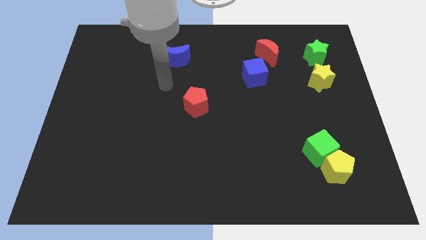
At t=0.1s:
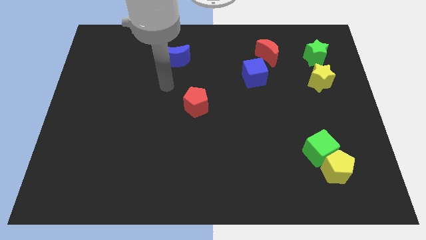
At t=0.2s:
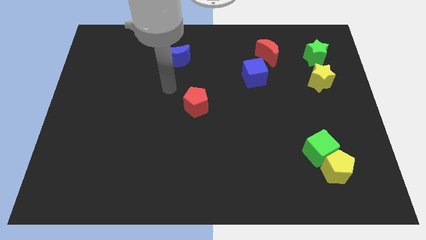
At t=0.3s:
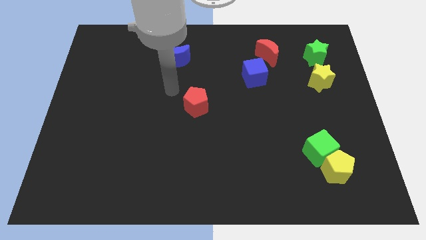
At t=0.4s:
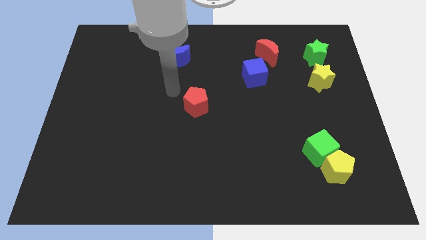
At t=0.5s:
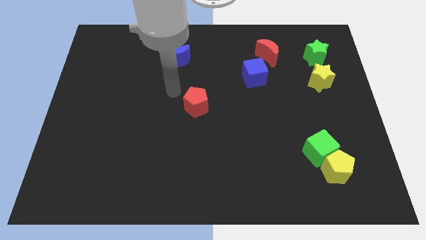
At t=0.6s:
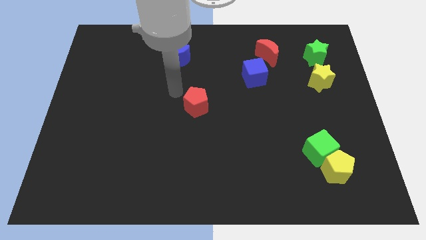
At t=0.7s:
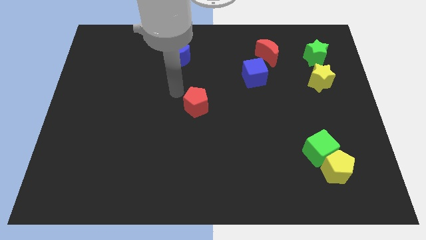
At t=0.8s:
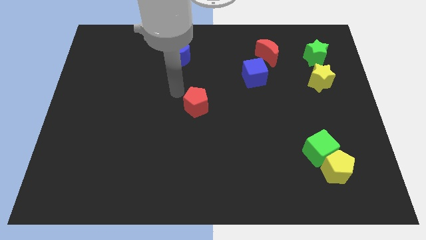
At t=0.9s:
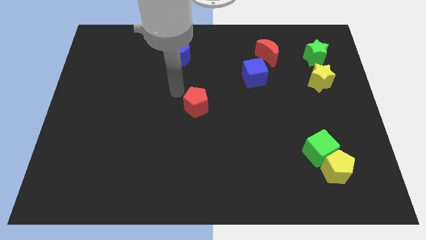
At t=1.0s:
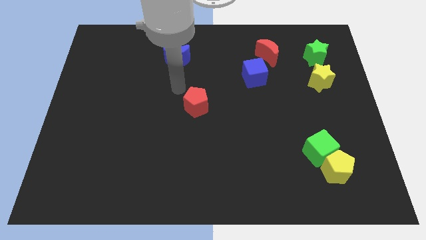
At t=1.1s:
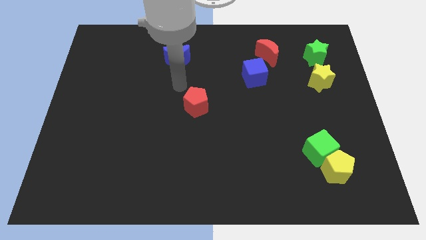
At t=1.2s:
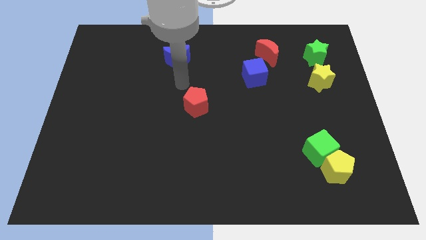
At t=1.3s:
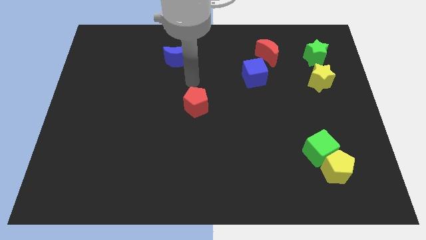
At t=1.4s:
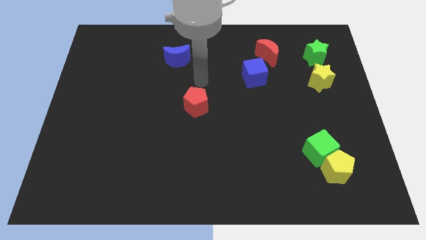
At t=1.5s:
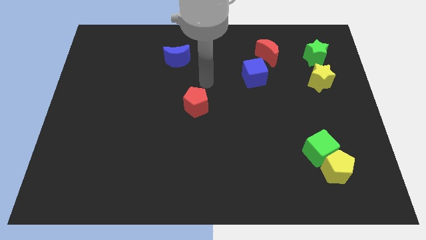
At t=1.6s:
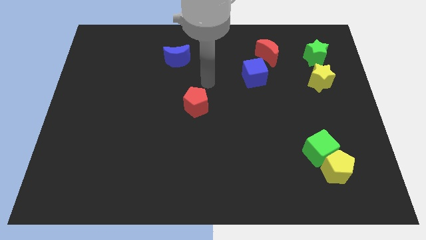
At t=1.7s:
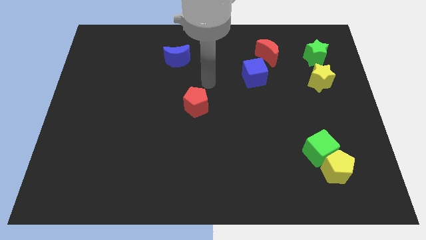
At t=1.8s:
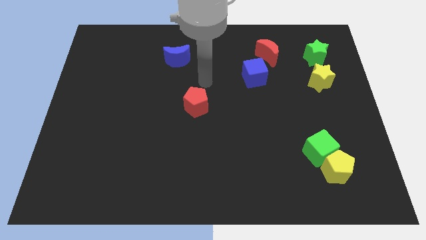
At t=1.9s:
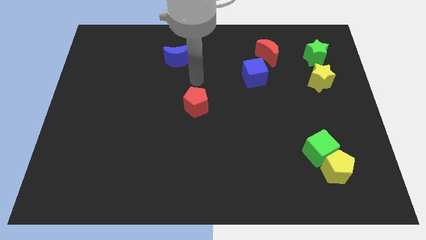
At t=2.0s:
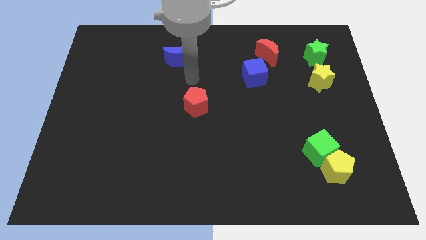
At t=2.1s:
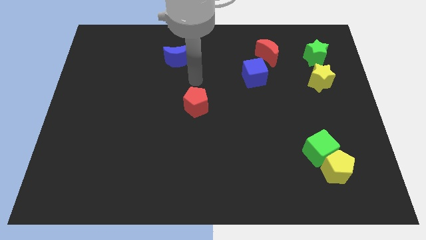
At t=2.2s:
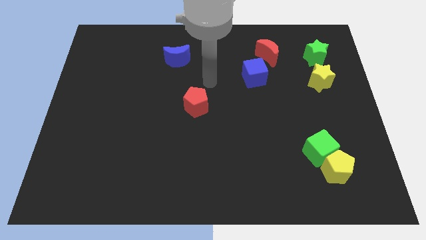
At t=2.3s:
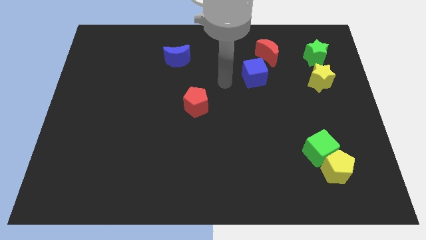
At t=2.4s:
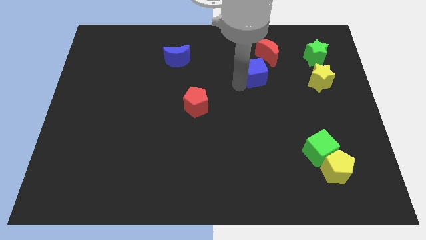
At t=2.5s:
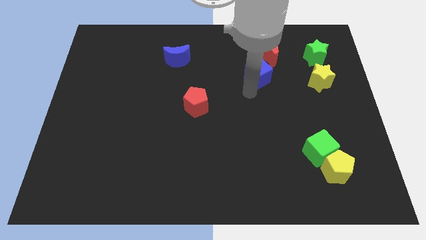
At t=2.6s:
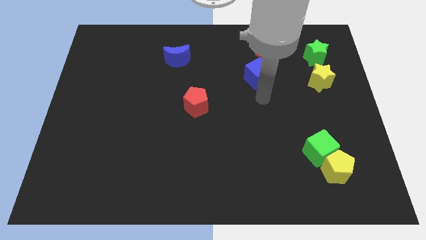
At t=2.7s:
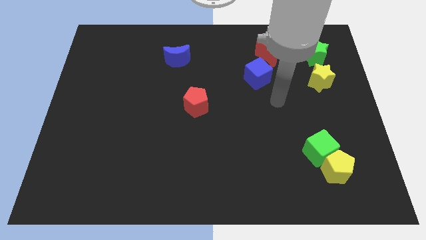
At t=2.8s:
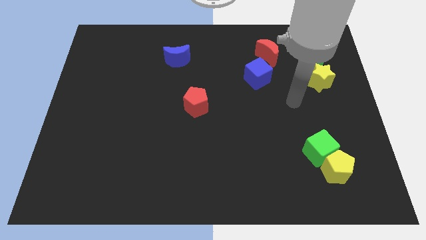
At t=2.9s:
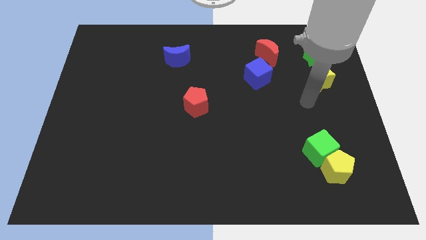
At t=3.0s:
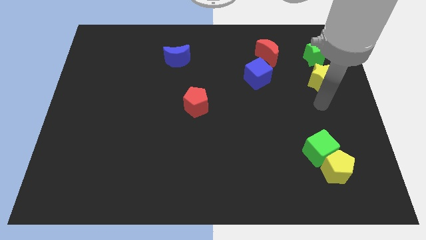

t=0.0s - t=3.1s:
move your arm below the yellow star

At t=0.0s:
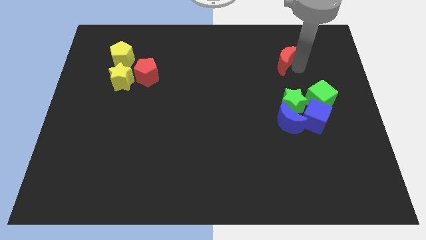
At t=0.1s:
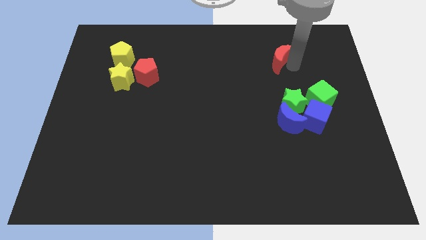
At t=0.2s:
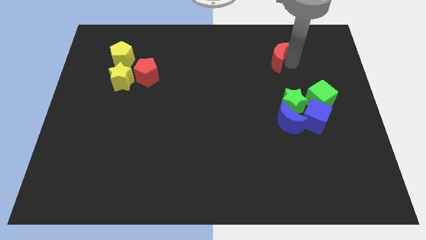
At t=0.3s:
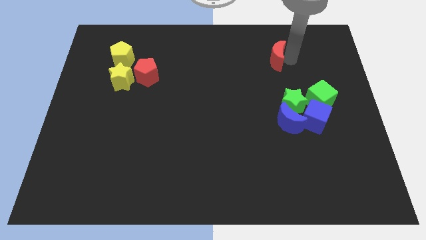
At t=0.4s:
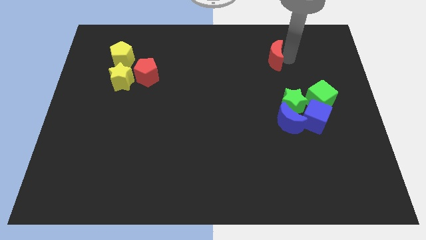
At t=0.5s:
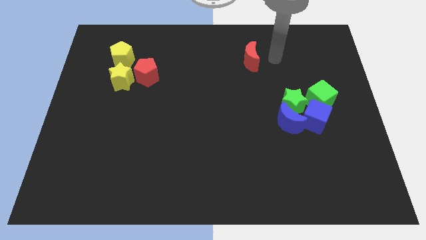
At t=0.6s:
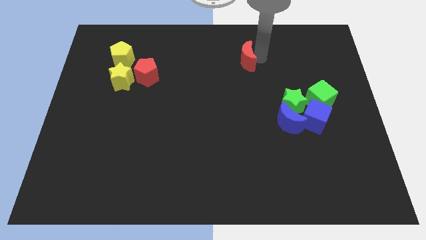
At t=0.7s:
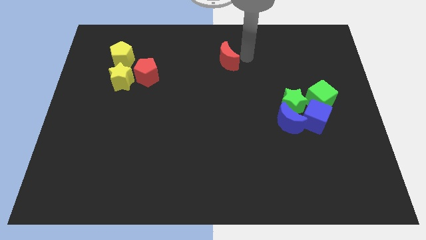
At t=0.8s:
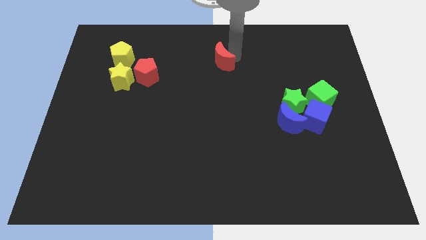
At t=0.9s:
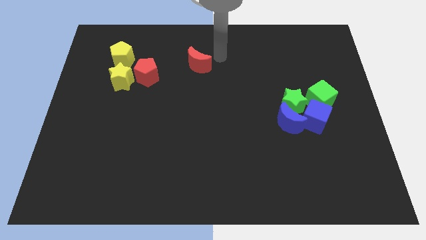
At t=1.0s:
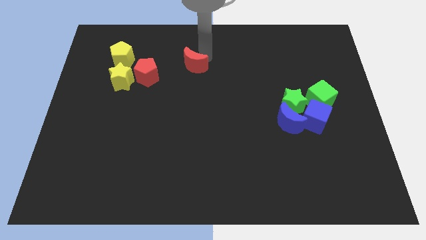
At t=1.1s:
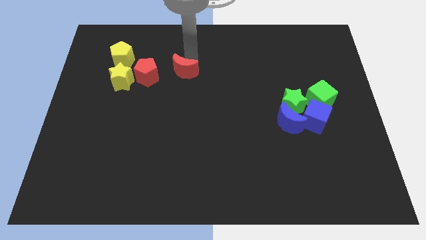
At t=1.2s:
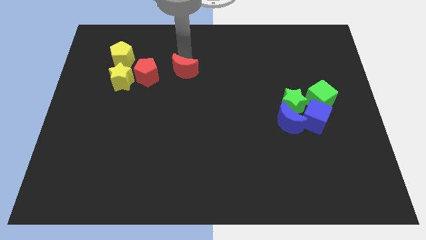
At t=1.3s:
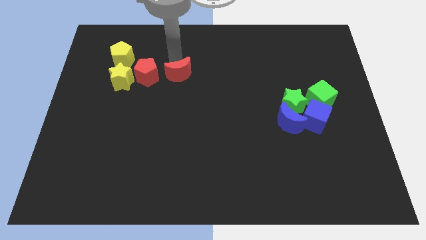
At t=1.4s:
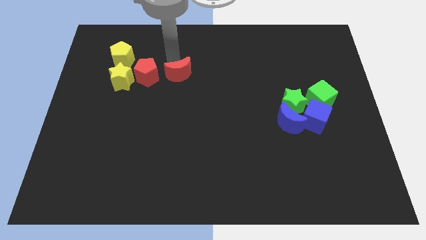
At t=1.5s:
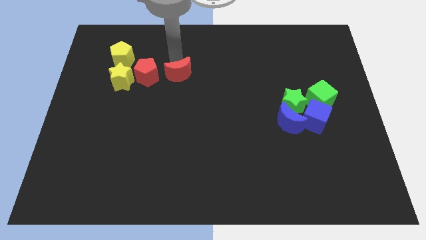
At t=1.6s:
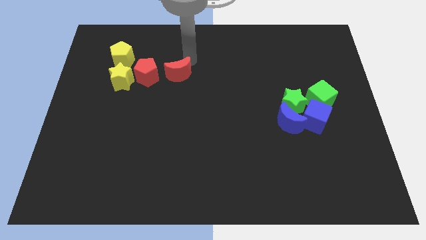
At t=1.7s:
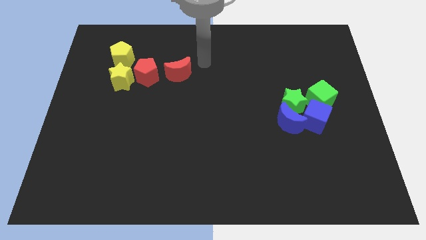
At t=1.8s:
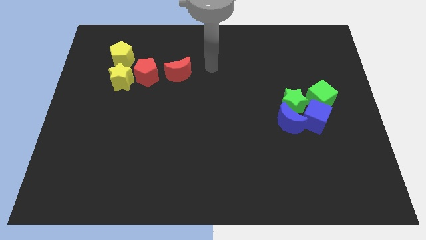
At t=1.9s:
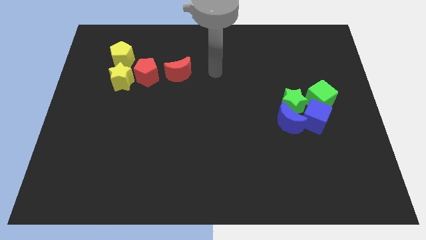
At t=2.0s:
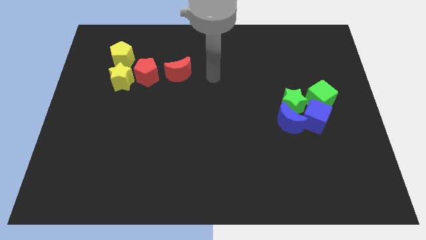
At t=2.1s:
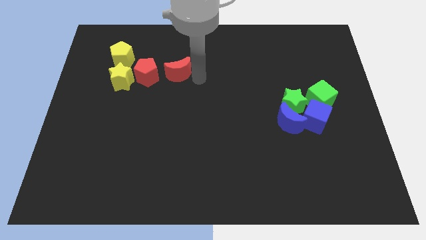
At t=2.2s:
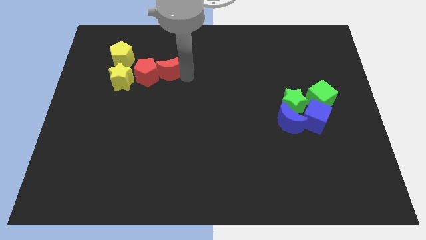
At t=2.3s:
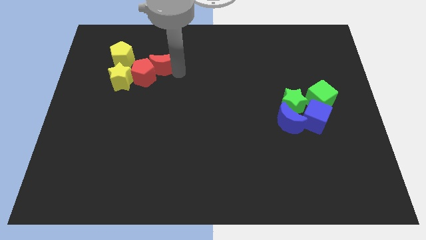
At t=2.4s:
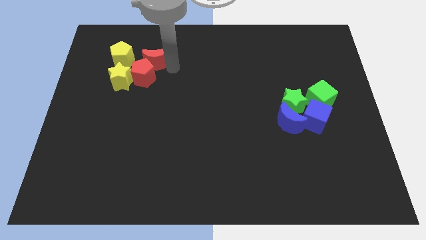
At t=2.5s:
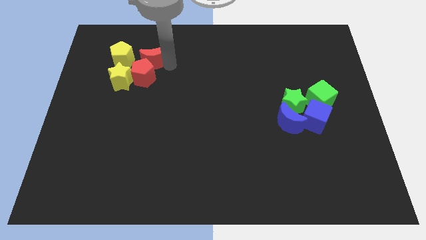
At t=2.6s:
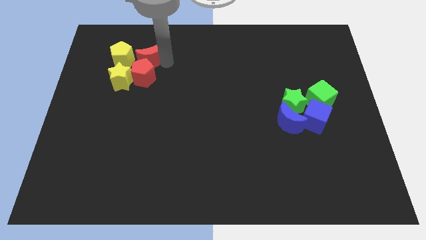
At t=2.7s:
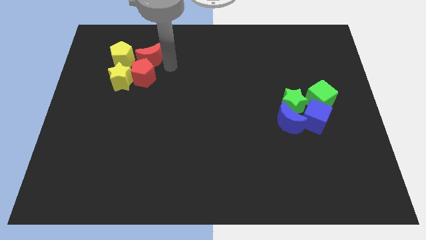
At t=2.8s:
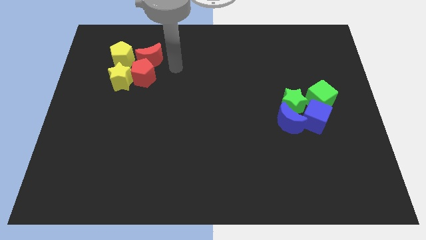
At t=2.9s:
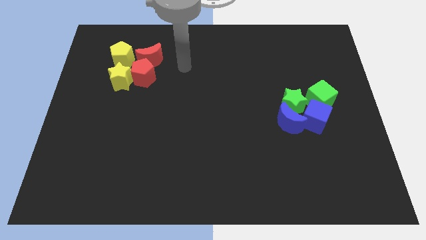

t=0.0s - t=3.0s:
move the red moon into the group of blocks

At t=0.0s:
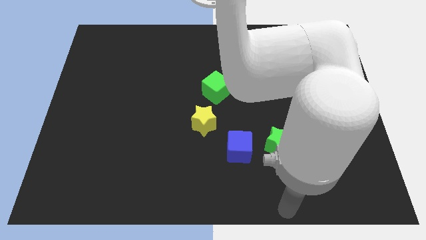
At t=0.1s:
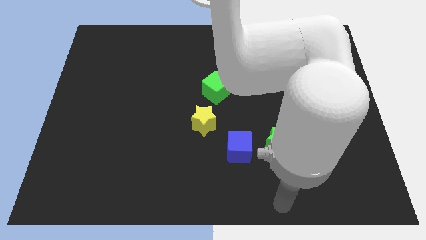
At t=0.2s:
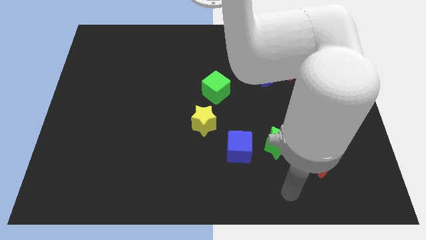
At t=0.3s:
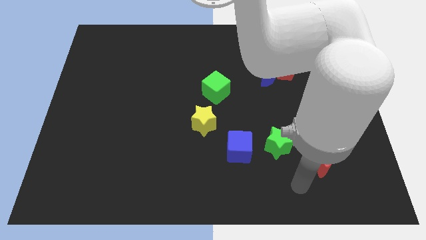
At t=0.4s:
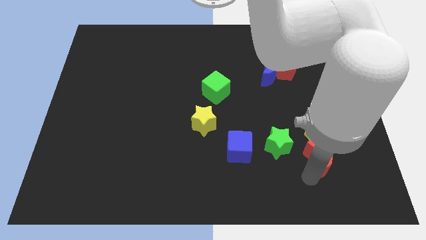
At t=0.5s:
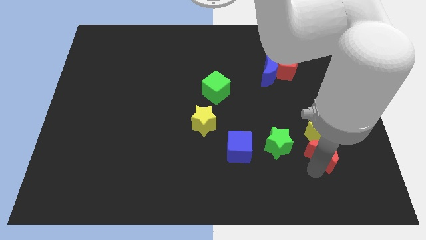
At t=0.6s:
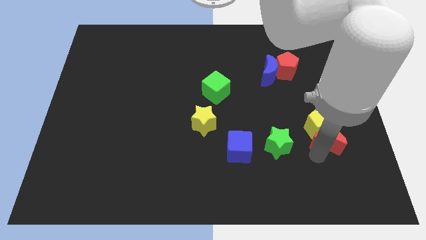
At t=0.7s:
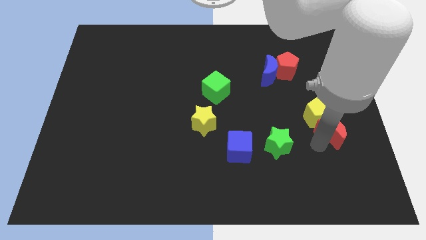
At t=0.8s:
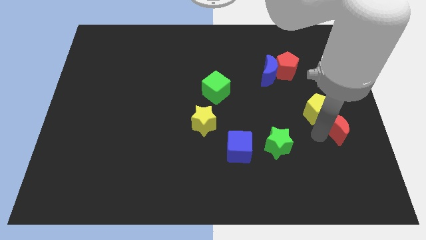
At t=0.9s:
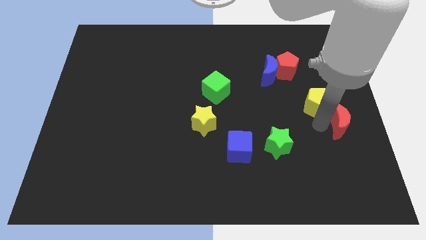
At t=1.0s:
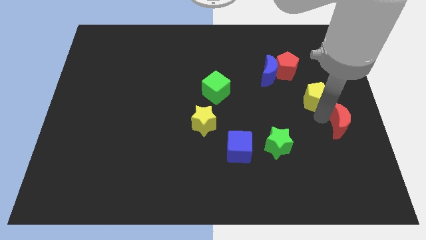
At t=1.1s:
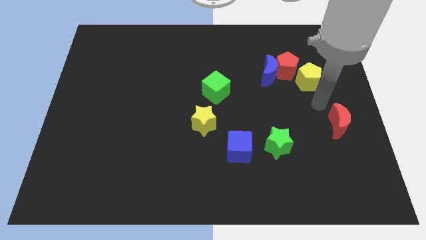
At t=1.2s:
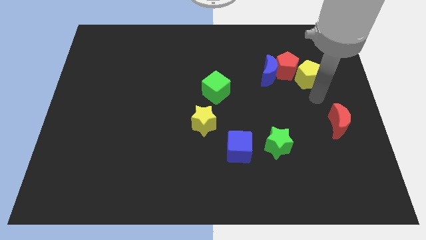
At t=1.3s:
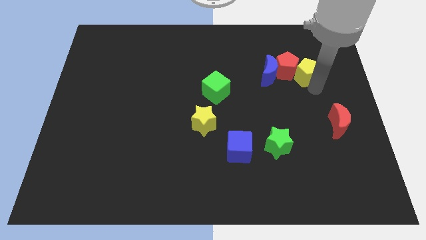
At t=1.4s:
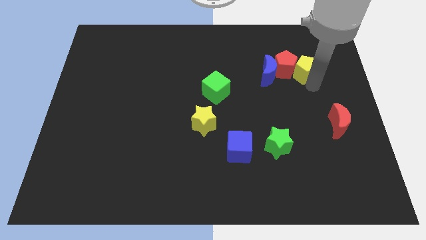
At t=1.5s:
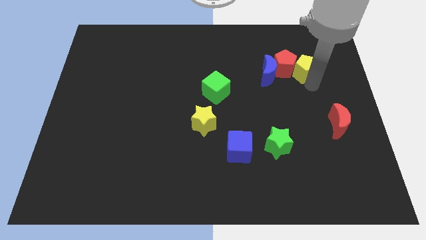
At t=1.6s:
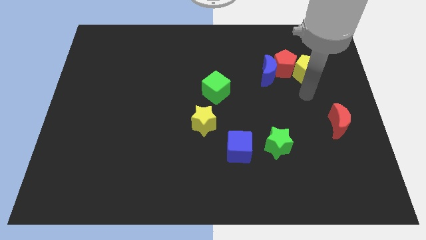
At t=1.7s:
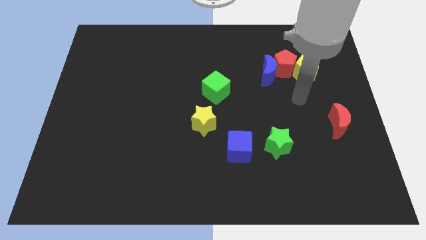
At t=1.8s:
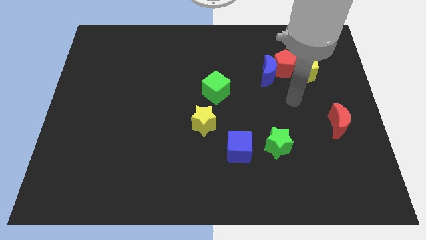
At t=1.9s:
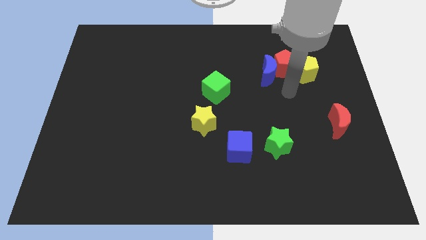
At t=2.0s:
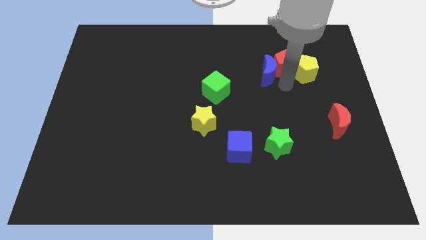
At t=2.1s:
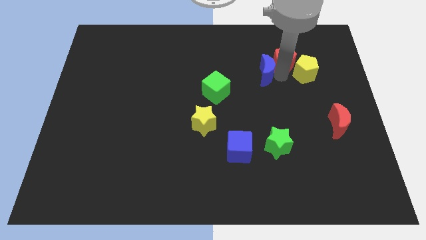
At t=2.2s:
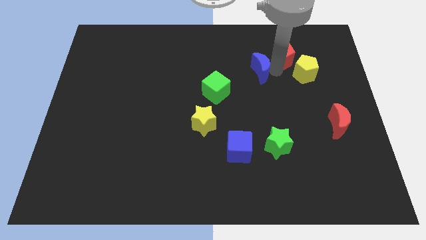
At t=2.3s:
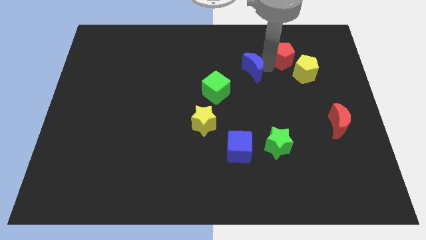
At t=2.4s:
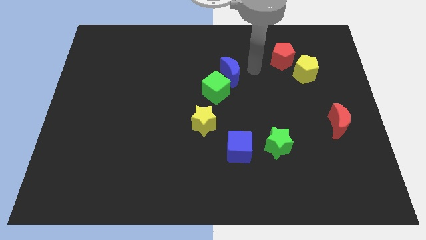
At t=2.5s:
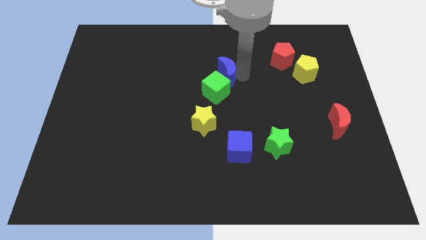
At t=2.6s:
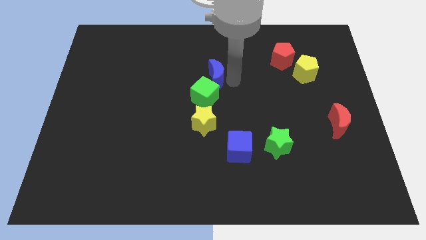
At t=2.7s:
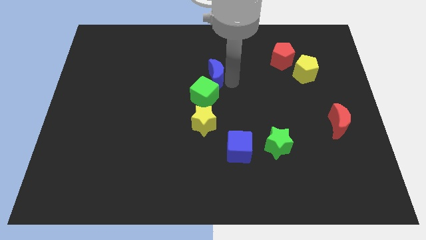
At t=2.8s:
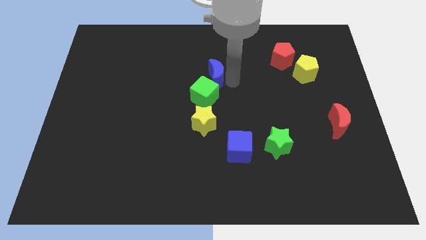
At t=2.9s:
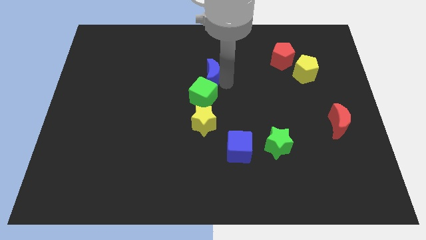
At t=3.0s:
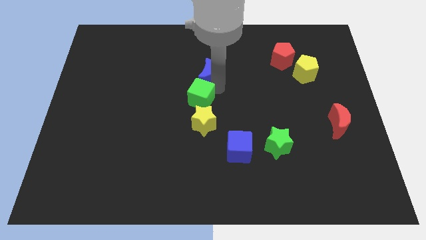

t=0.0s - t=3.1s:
place the blue moon above the green cube
